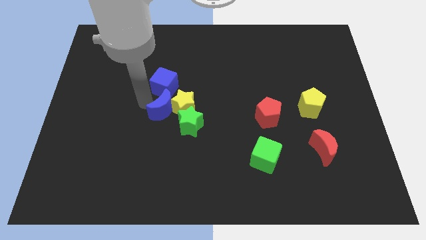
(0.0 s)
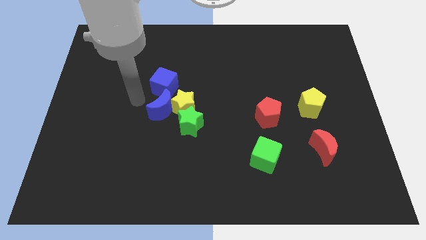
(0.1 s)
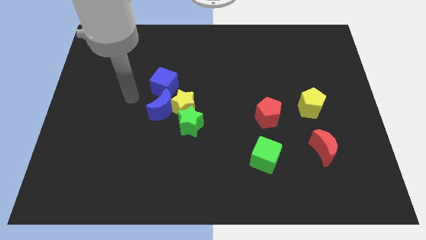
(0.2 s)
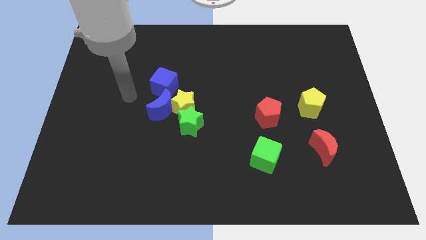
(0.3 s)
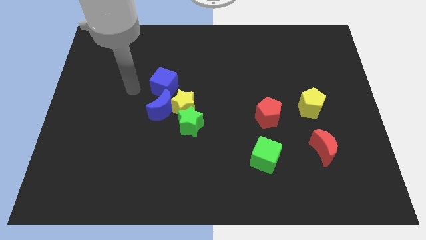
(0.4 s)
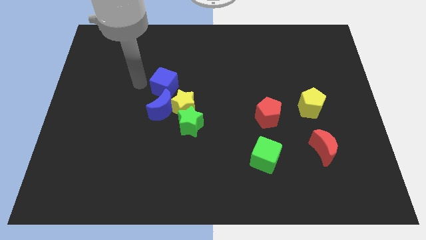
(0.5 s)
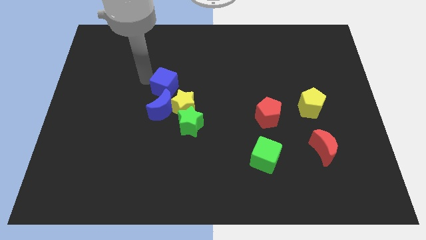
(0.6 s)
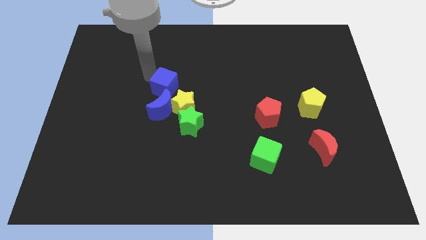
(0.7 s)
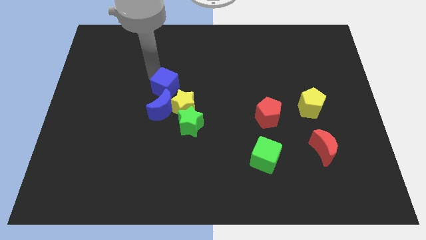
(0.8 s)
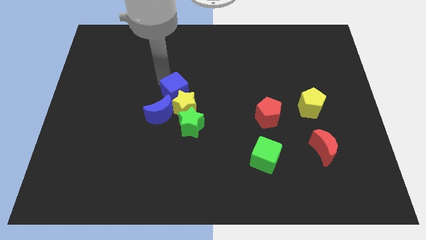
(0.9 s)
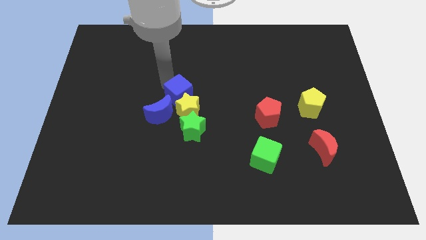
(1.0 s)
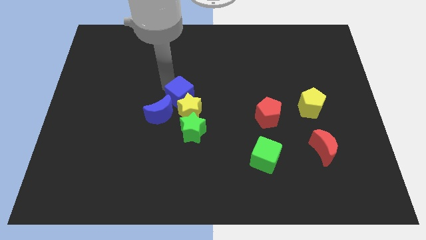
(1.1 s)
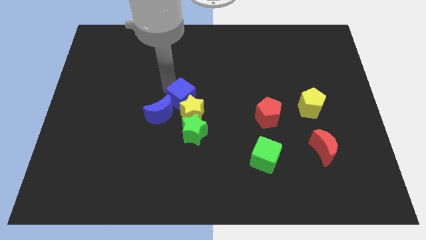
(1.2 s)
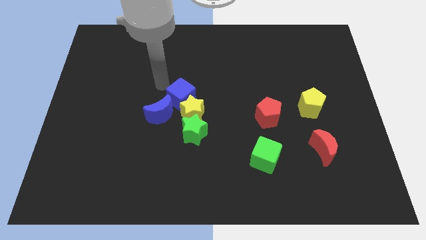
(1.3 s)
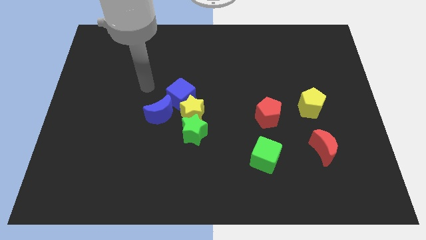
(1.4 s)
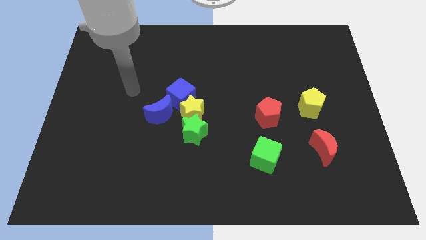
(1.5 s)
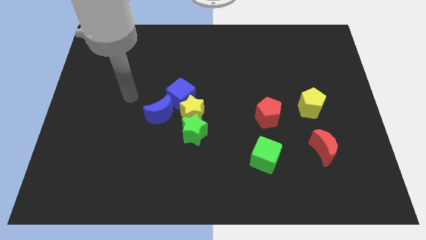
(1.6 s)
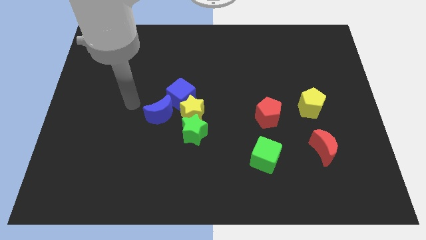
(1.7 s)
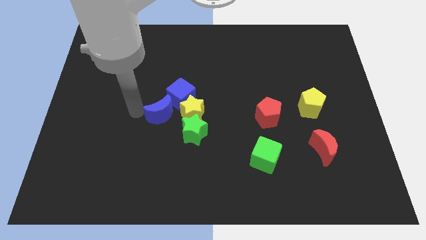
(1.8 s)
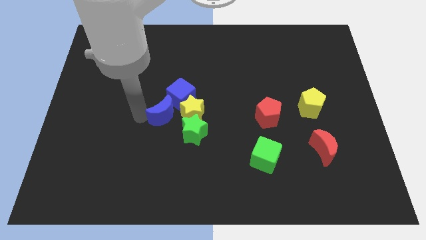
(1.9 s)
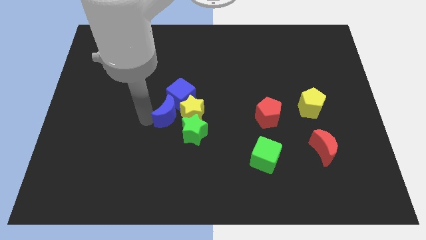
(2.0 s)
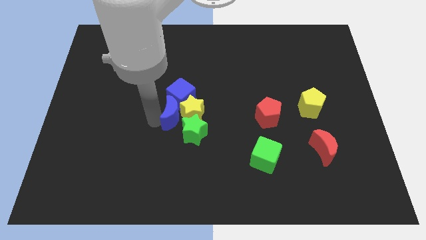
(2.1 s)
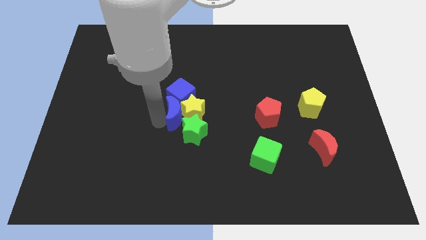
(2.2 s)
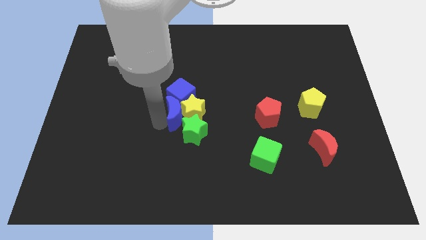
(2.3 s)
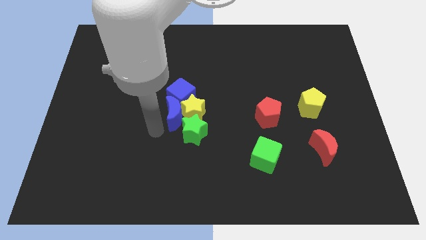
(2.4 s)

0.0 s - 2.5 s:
push blue crescent near yellow star

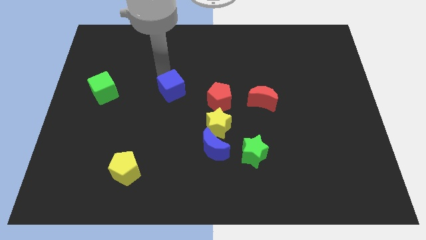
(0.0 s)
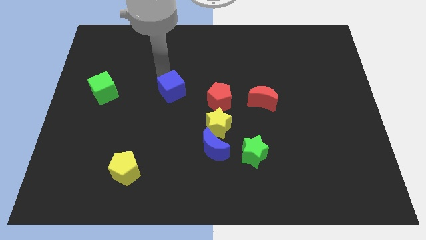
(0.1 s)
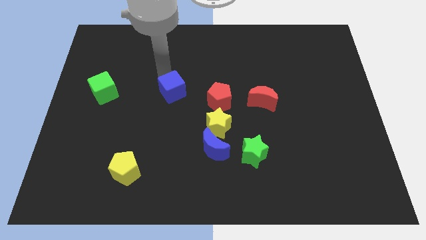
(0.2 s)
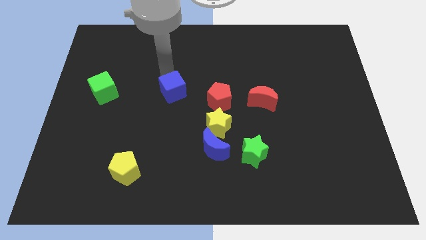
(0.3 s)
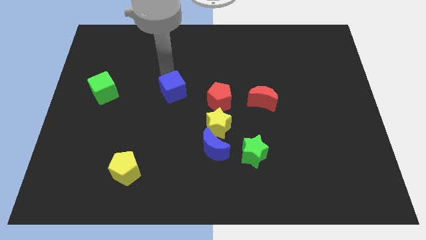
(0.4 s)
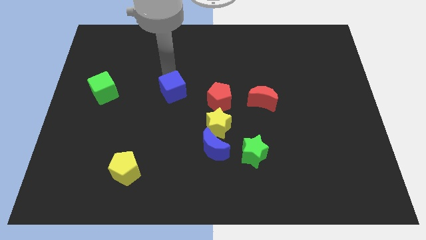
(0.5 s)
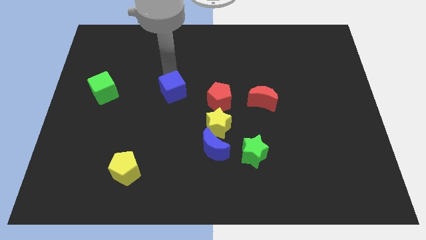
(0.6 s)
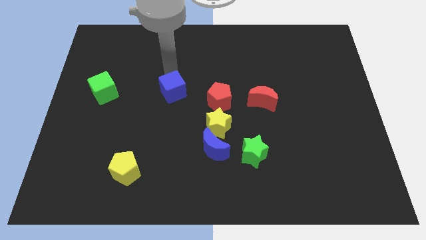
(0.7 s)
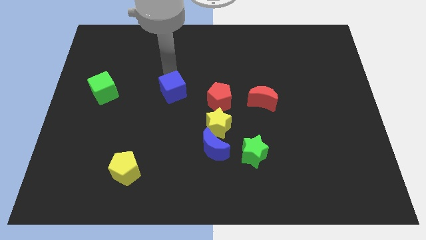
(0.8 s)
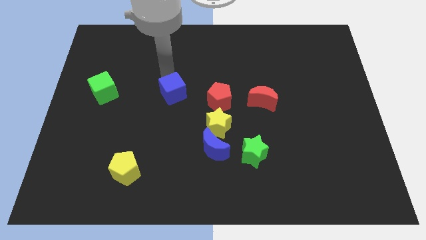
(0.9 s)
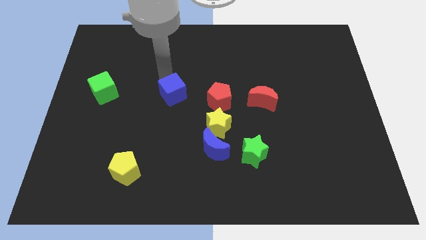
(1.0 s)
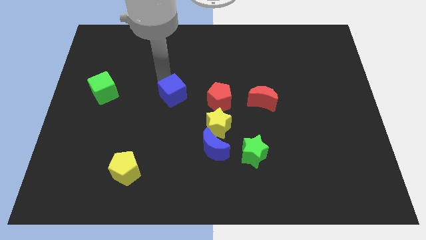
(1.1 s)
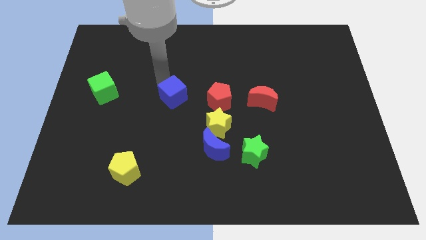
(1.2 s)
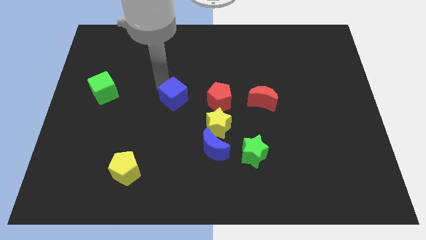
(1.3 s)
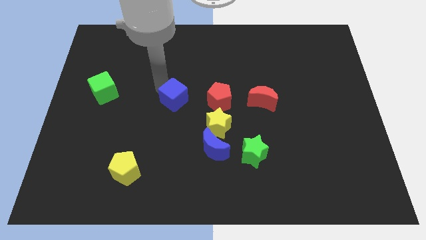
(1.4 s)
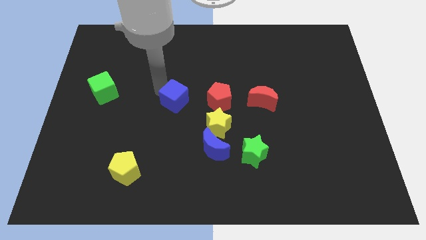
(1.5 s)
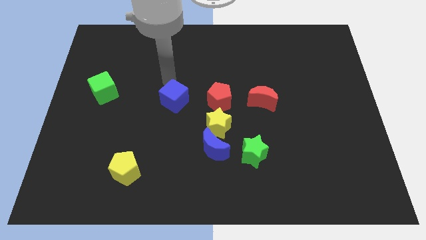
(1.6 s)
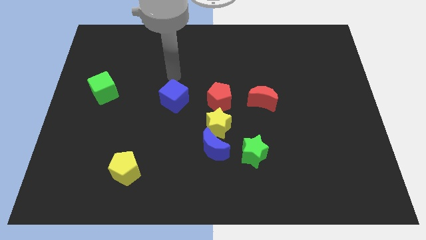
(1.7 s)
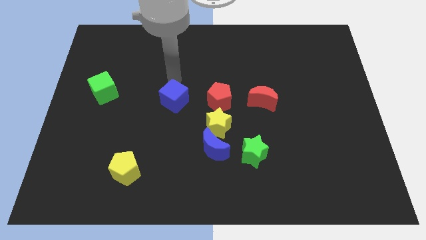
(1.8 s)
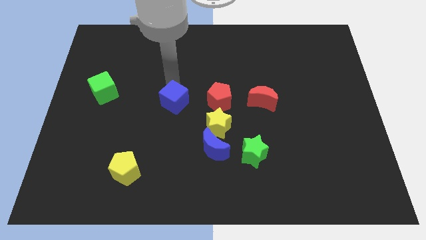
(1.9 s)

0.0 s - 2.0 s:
place blue cube to the left of red pentagon

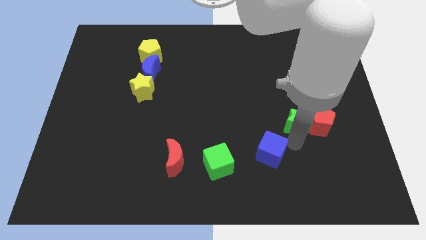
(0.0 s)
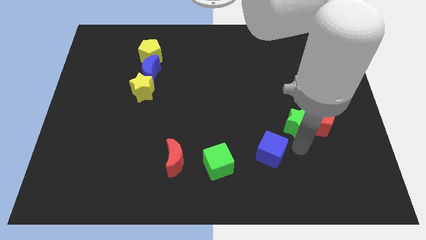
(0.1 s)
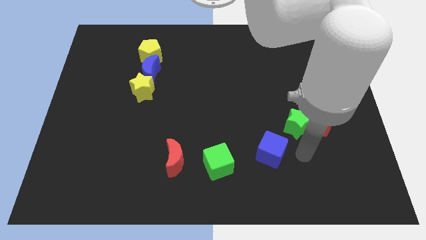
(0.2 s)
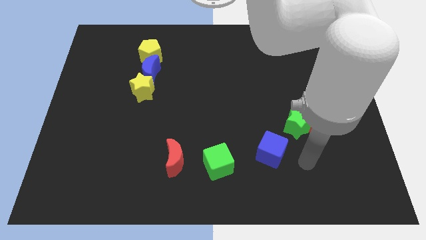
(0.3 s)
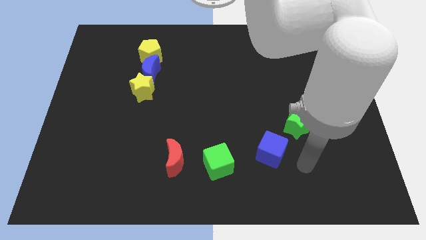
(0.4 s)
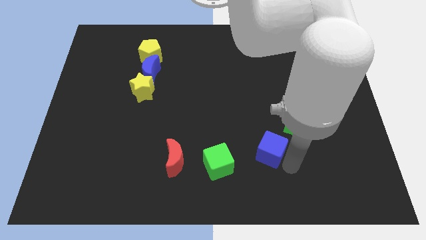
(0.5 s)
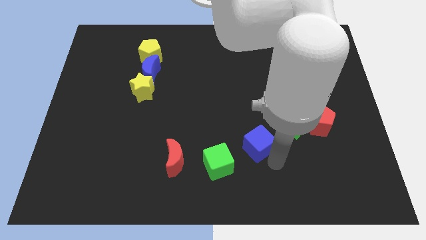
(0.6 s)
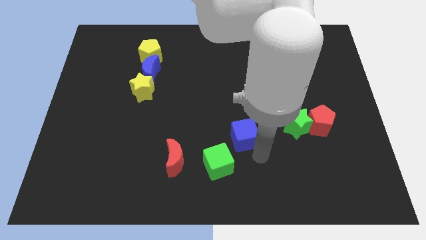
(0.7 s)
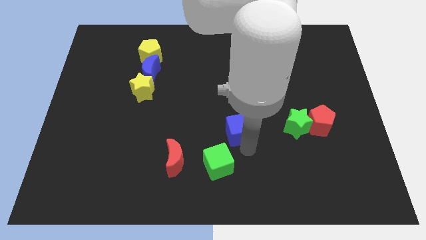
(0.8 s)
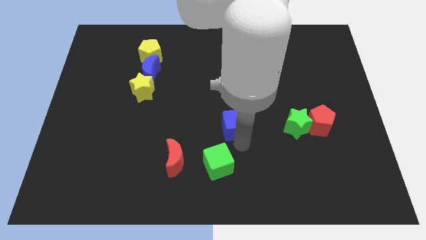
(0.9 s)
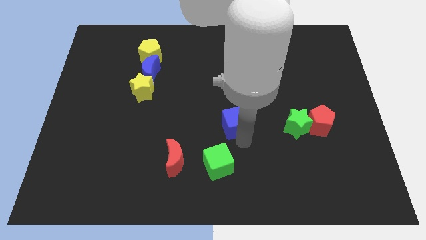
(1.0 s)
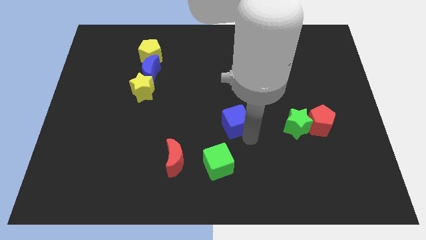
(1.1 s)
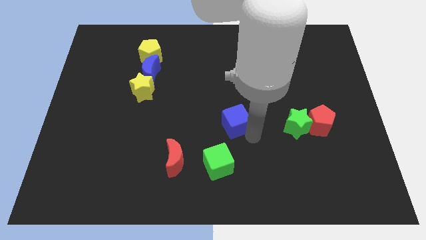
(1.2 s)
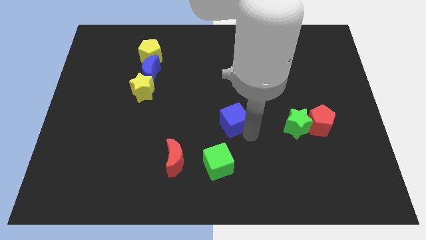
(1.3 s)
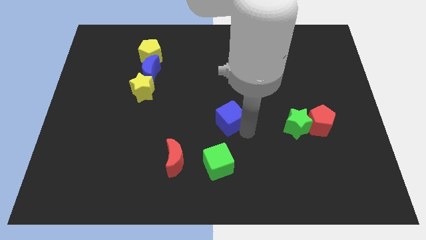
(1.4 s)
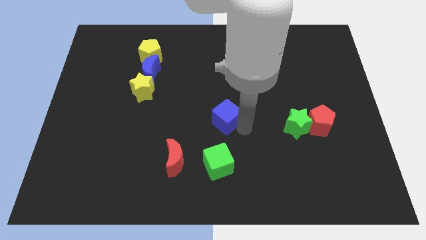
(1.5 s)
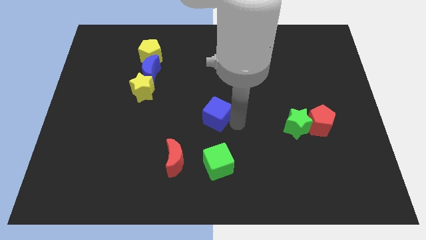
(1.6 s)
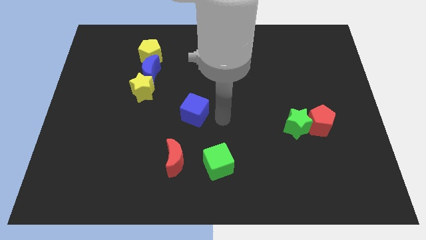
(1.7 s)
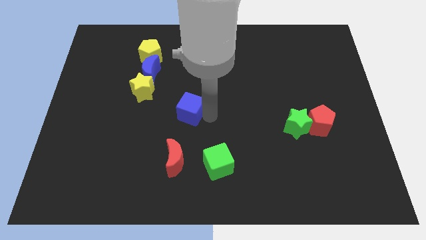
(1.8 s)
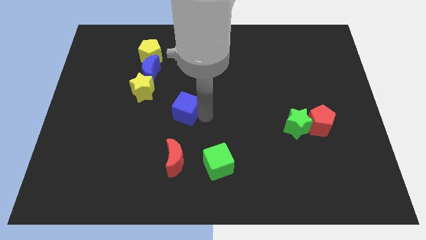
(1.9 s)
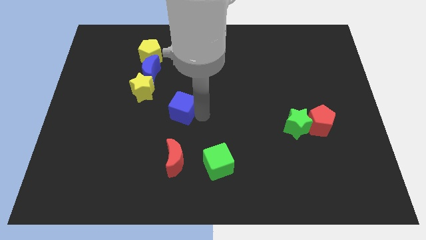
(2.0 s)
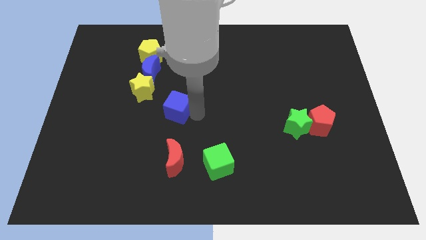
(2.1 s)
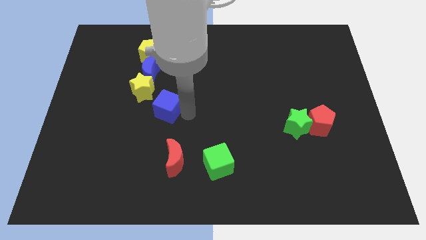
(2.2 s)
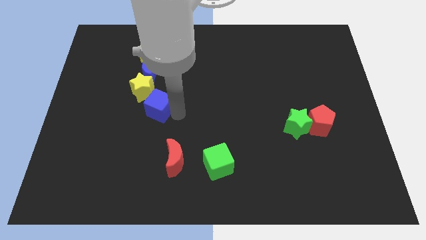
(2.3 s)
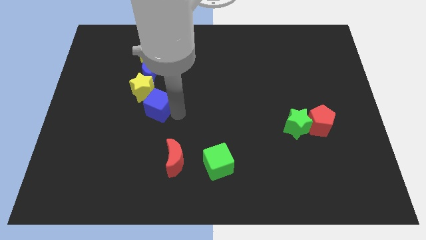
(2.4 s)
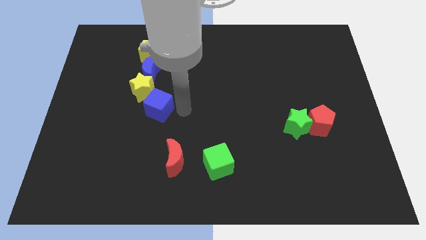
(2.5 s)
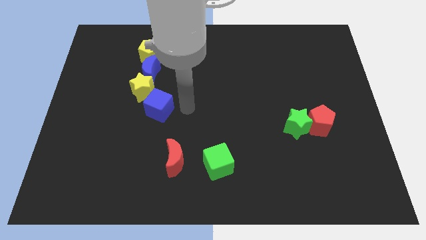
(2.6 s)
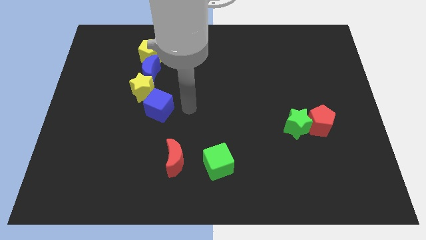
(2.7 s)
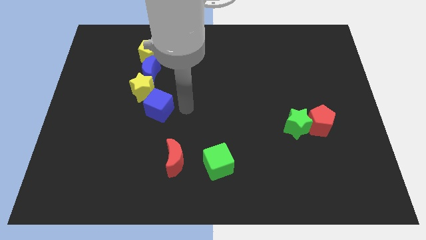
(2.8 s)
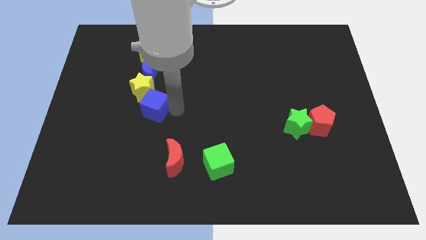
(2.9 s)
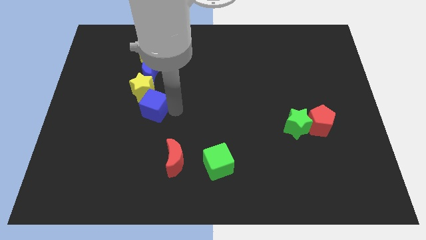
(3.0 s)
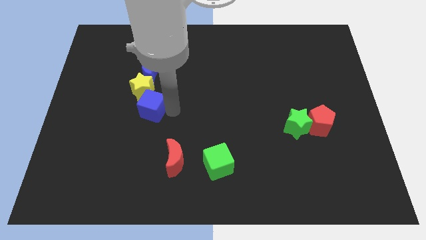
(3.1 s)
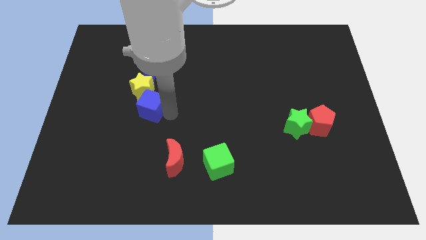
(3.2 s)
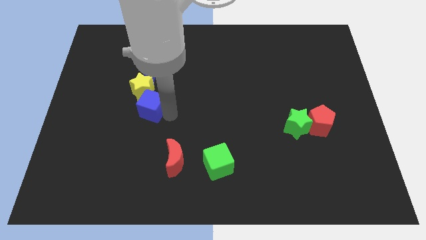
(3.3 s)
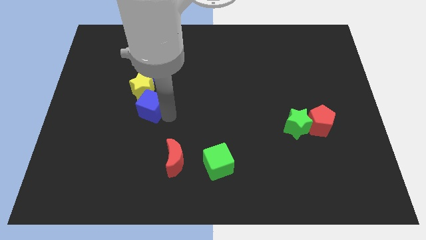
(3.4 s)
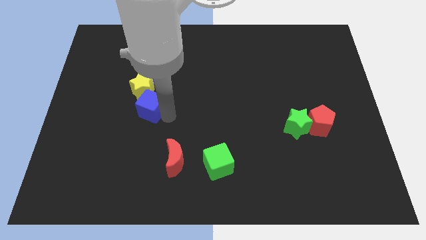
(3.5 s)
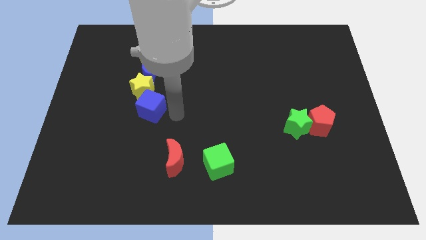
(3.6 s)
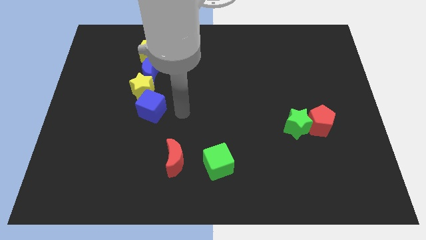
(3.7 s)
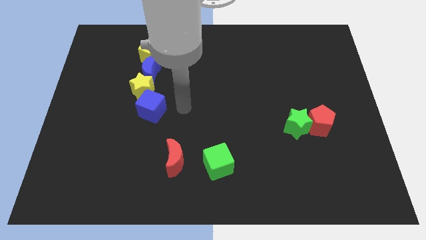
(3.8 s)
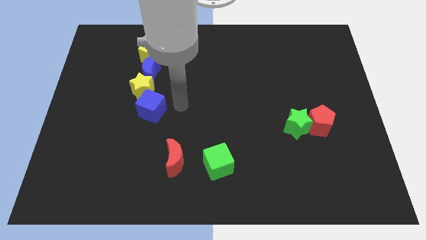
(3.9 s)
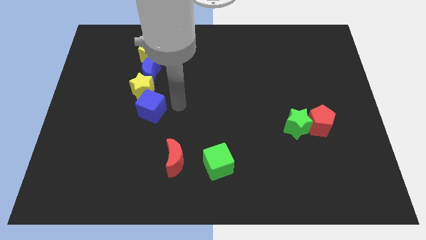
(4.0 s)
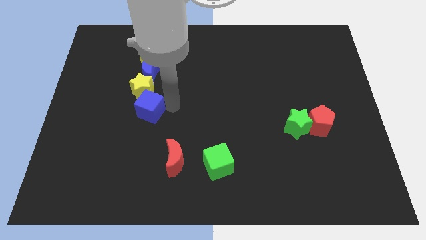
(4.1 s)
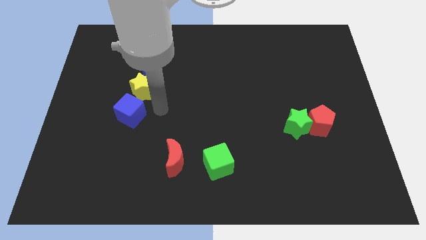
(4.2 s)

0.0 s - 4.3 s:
push the blue cube to the bottom of the yellow star

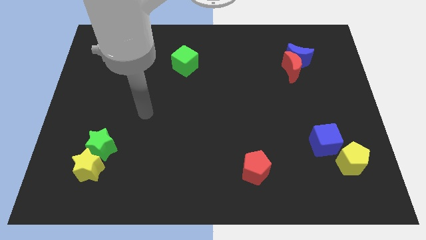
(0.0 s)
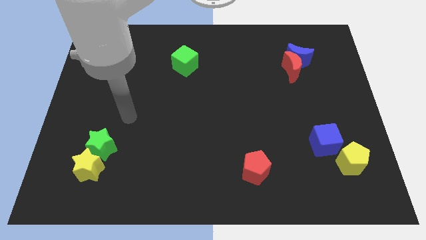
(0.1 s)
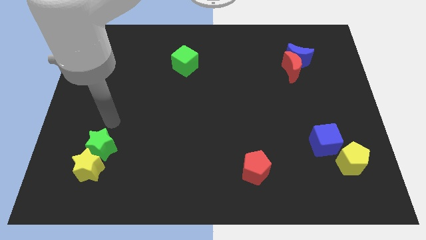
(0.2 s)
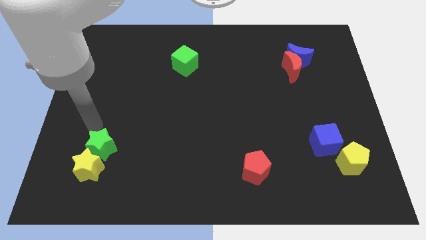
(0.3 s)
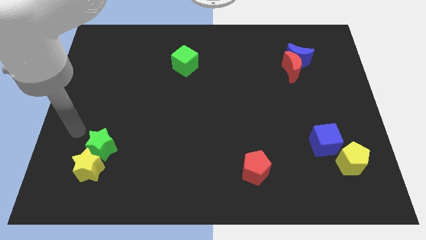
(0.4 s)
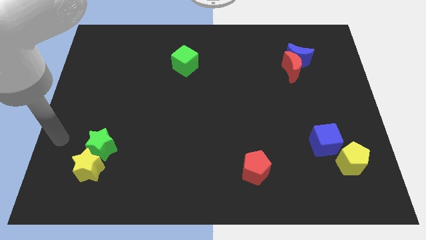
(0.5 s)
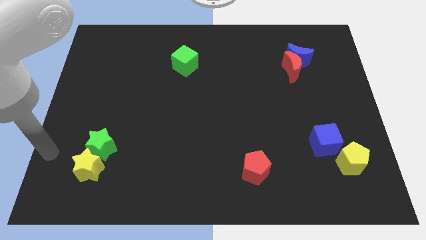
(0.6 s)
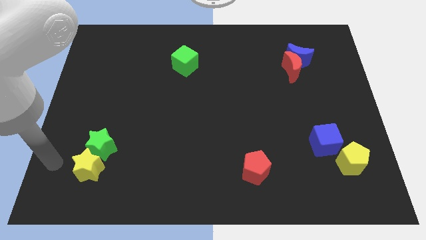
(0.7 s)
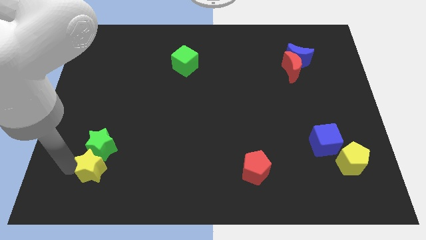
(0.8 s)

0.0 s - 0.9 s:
move your arm to the left of yellow star
